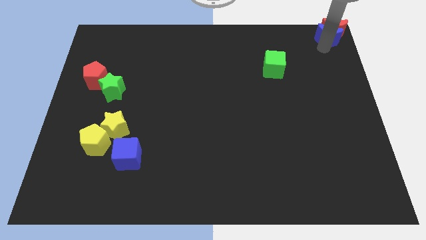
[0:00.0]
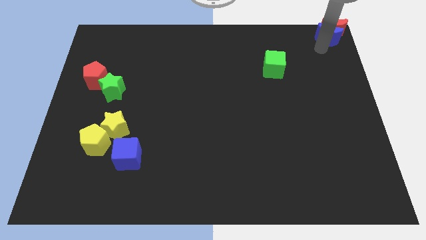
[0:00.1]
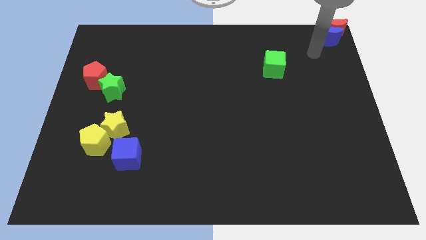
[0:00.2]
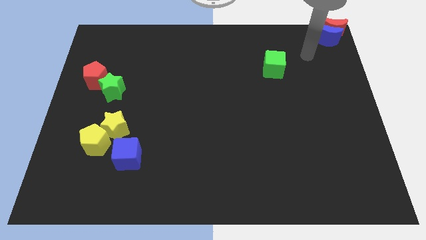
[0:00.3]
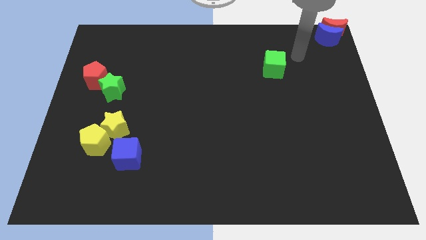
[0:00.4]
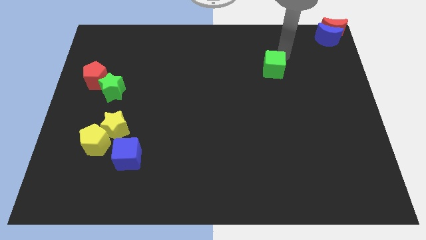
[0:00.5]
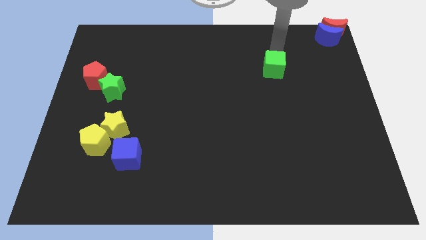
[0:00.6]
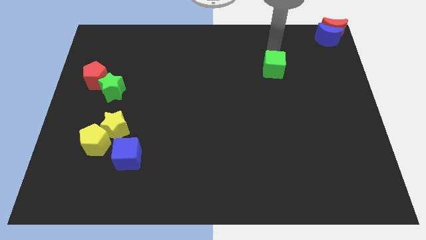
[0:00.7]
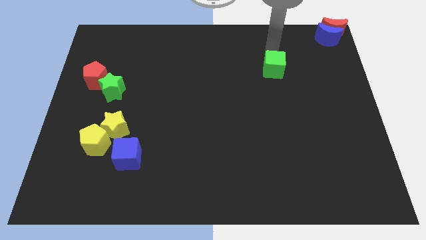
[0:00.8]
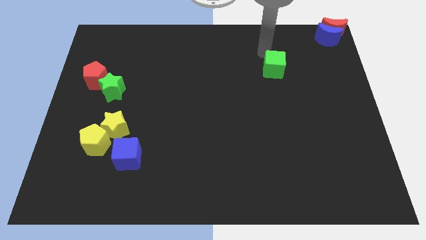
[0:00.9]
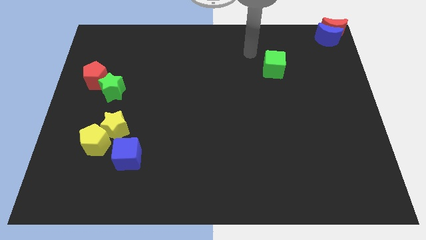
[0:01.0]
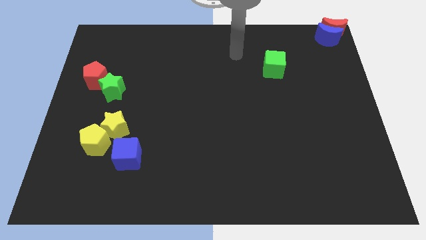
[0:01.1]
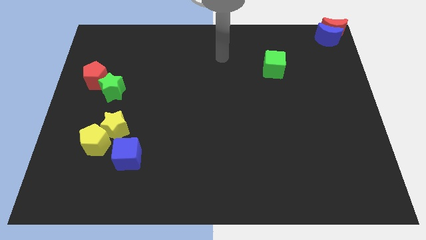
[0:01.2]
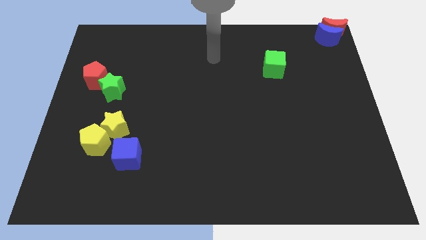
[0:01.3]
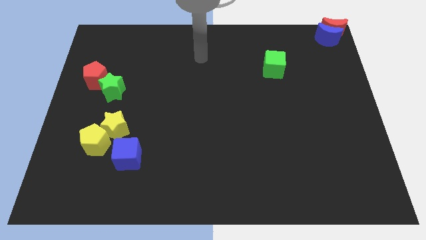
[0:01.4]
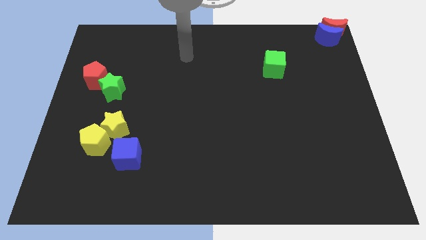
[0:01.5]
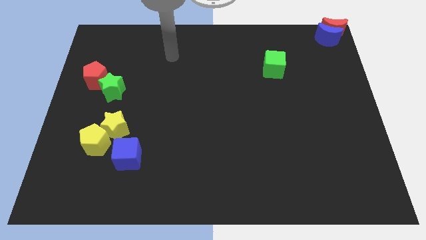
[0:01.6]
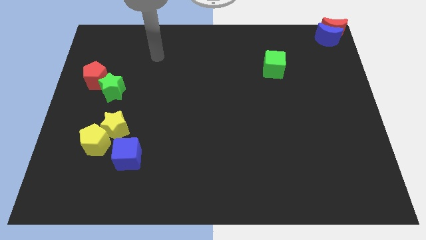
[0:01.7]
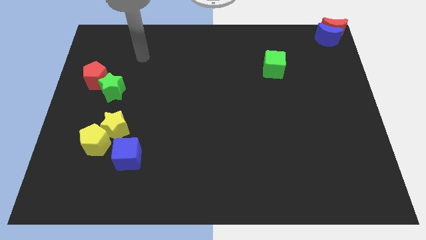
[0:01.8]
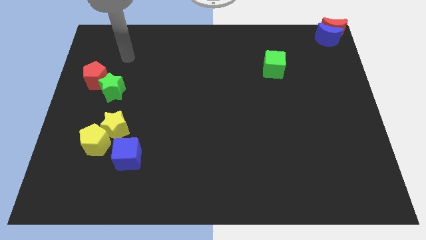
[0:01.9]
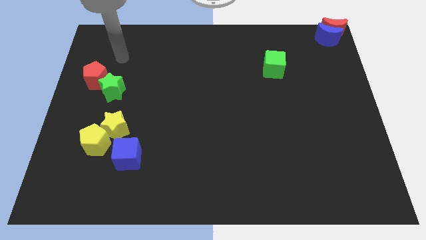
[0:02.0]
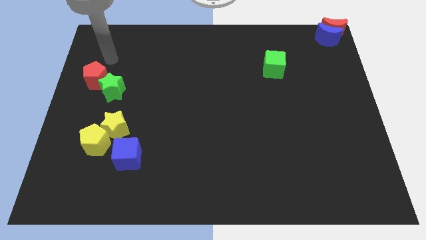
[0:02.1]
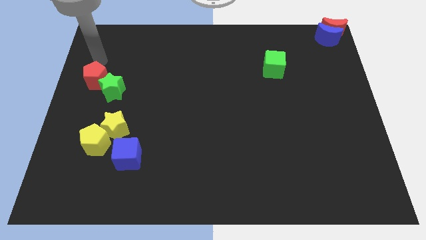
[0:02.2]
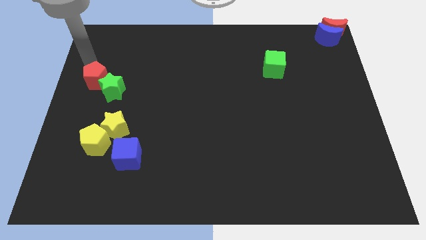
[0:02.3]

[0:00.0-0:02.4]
move your arm away from the blue crescent

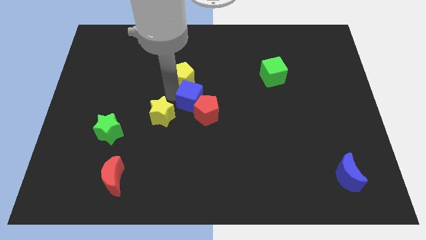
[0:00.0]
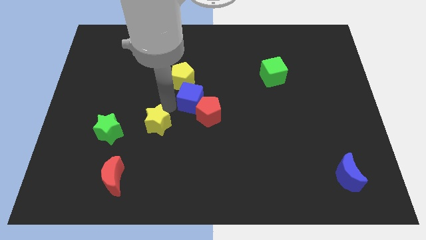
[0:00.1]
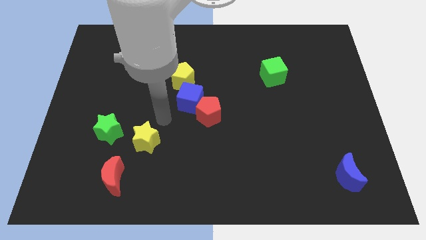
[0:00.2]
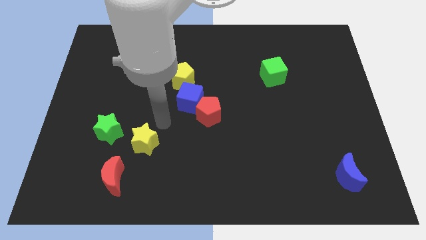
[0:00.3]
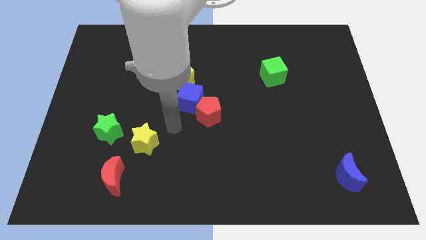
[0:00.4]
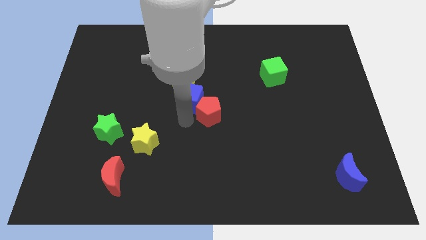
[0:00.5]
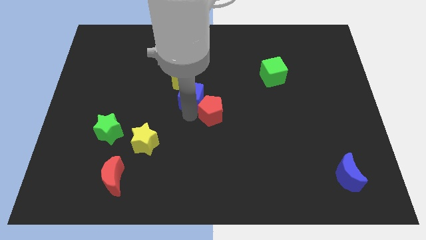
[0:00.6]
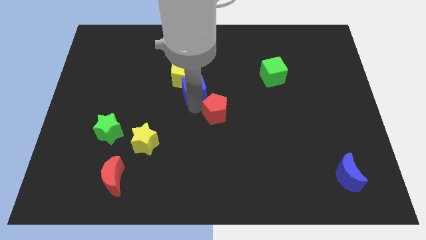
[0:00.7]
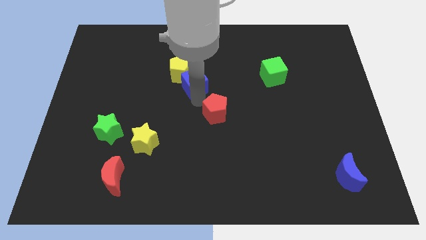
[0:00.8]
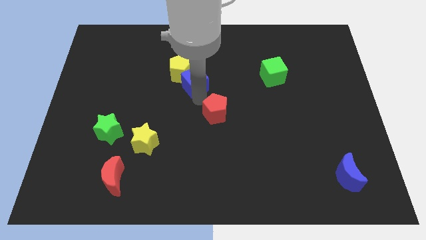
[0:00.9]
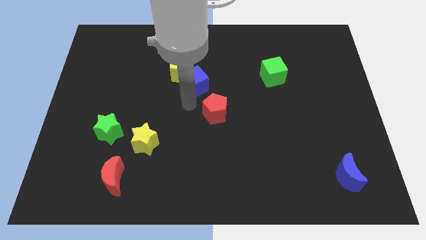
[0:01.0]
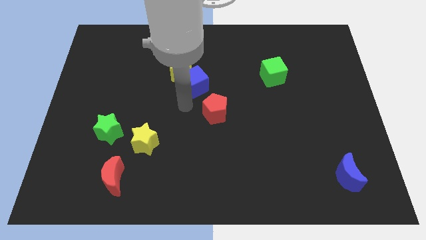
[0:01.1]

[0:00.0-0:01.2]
push the blue cube into the yellow pentagon

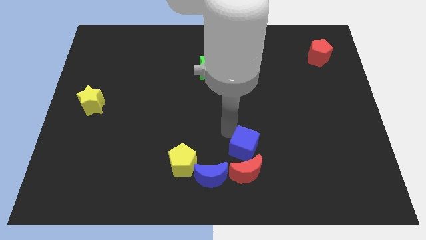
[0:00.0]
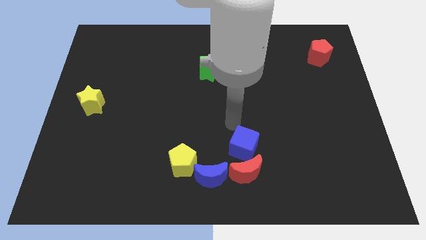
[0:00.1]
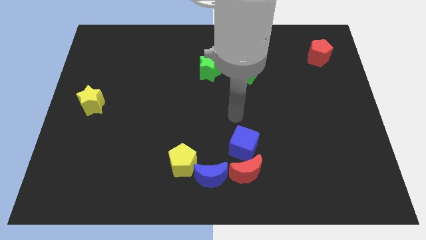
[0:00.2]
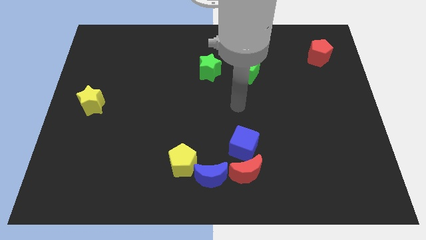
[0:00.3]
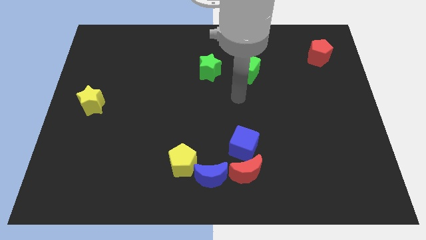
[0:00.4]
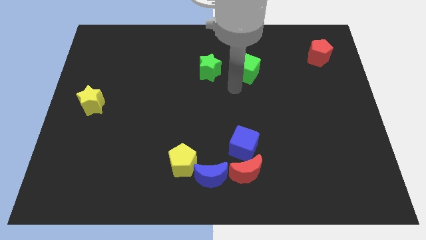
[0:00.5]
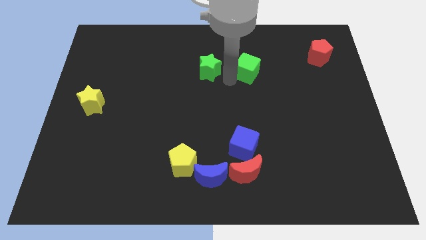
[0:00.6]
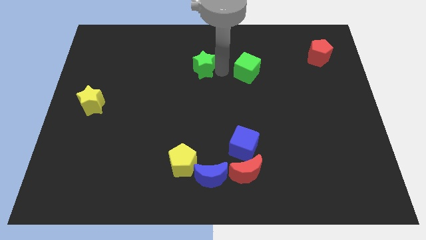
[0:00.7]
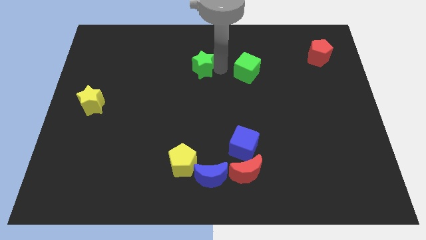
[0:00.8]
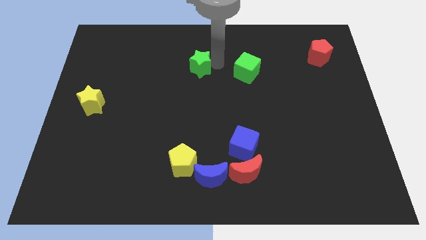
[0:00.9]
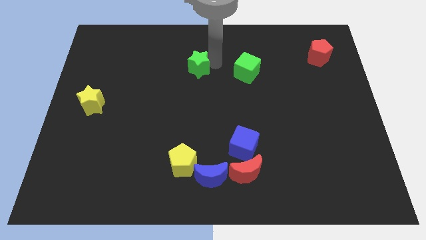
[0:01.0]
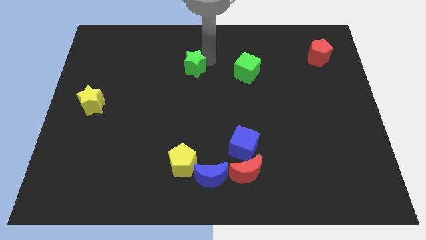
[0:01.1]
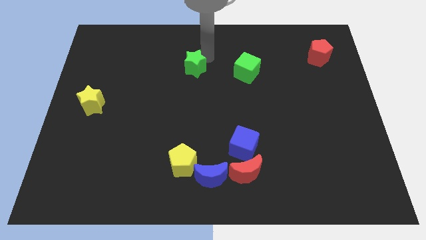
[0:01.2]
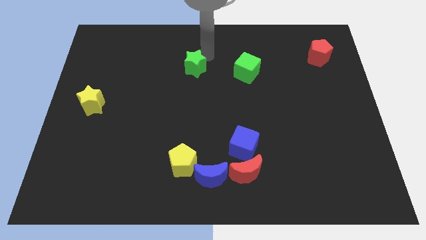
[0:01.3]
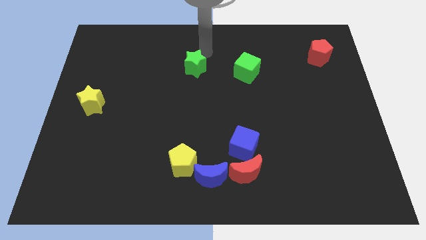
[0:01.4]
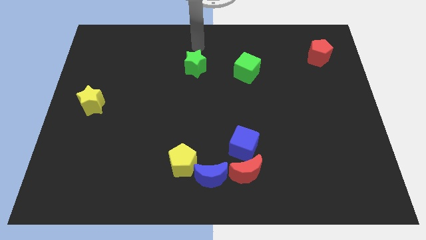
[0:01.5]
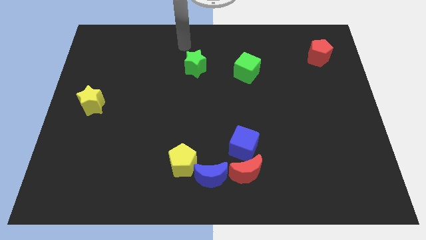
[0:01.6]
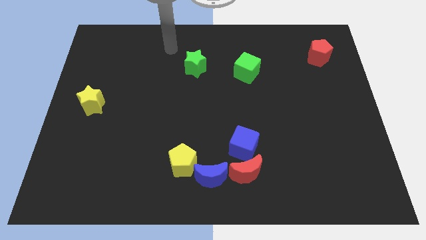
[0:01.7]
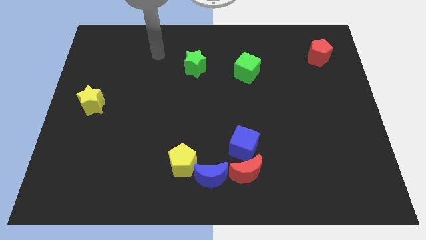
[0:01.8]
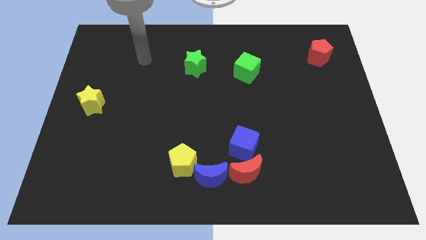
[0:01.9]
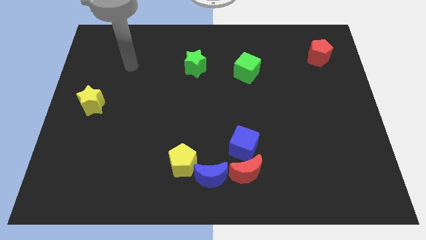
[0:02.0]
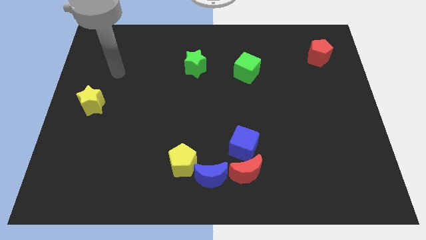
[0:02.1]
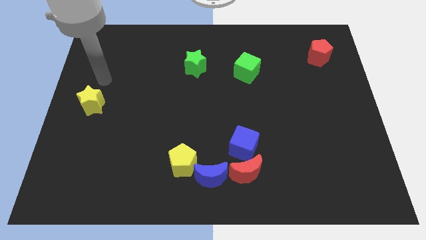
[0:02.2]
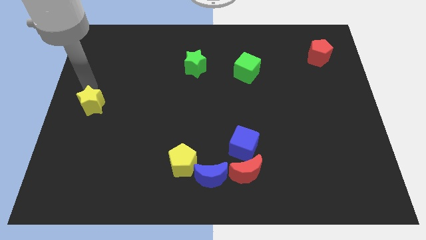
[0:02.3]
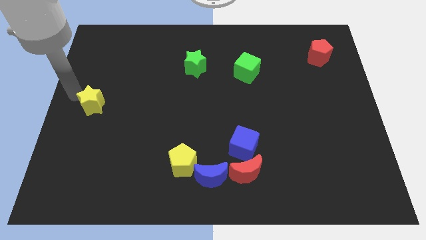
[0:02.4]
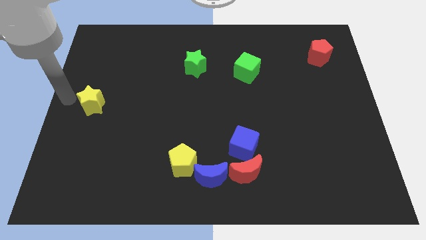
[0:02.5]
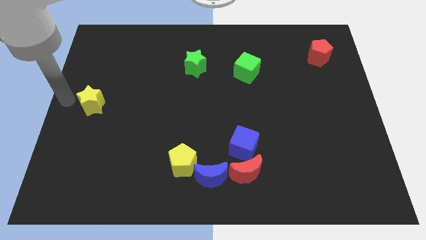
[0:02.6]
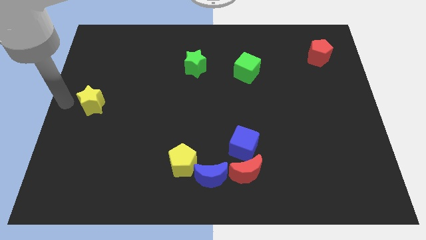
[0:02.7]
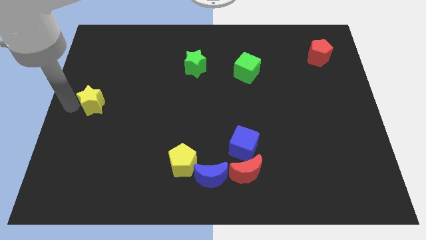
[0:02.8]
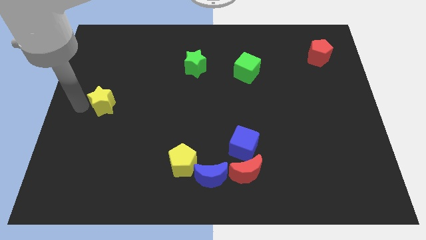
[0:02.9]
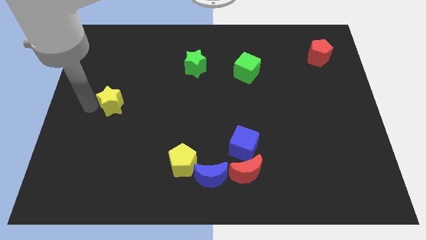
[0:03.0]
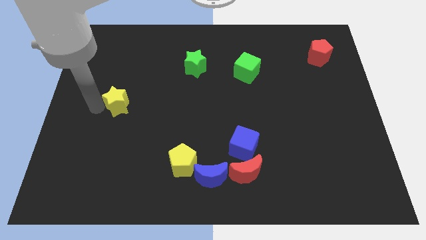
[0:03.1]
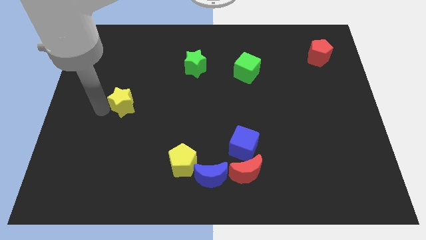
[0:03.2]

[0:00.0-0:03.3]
go near to the yellow star

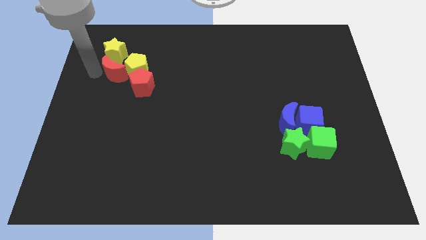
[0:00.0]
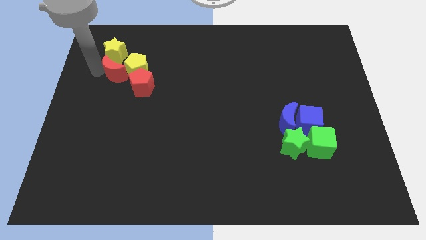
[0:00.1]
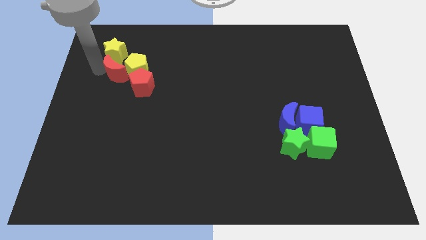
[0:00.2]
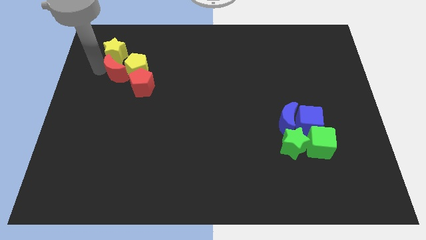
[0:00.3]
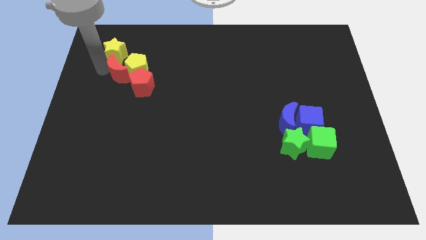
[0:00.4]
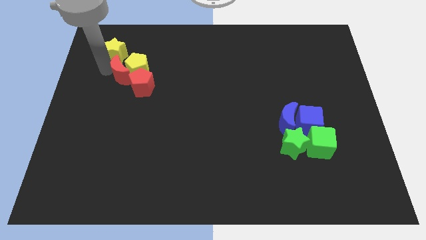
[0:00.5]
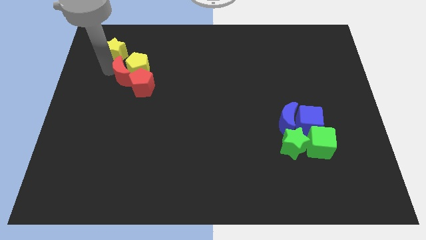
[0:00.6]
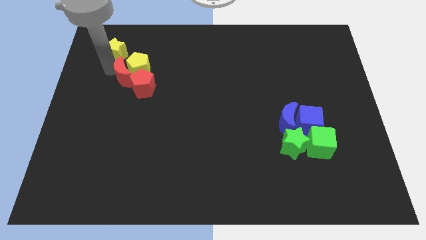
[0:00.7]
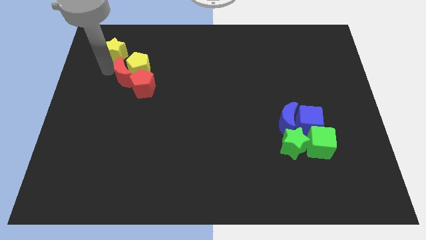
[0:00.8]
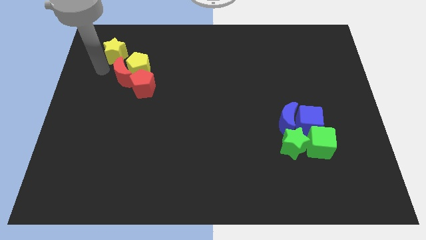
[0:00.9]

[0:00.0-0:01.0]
move the red crescent close to the yellow pentagon

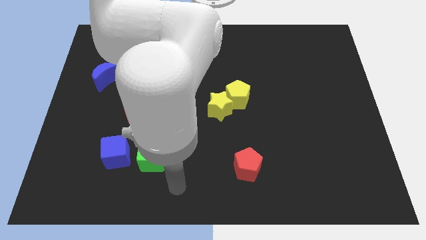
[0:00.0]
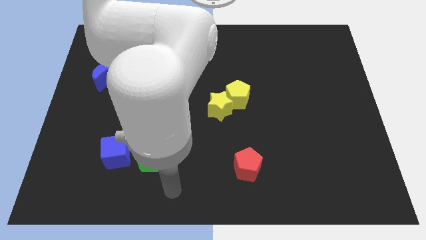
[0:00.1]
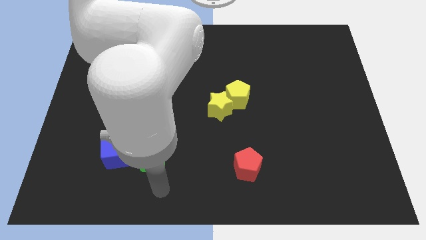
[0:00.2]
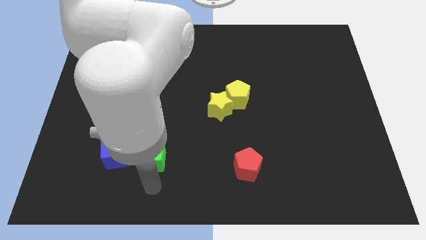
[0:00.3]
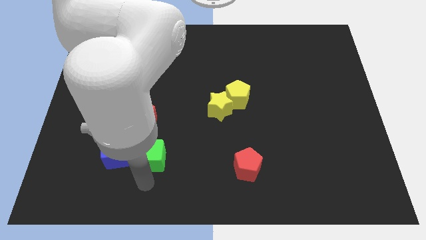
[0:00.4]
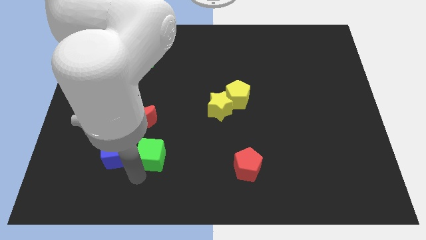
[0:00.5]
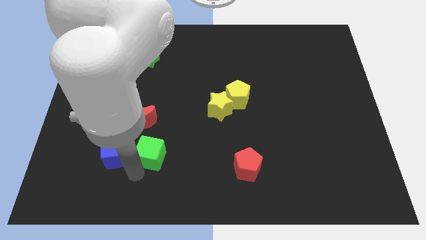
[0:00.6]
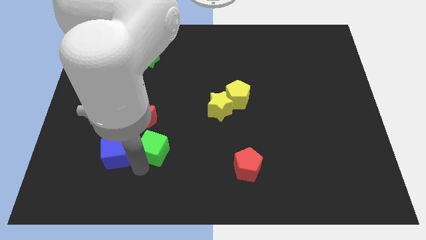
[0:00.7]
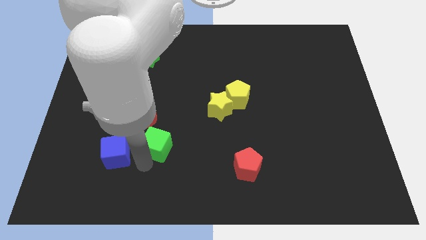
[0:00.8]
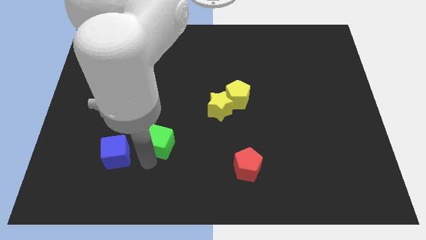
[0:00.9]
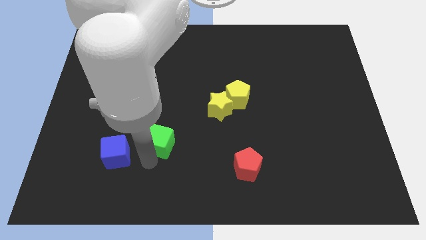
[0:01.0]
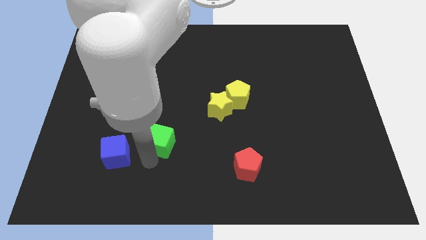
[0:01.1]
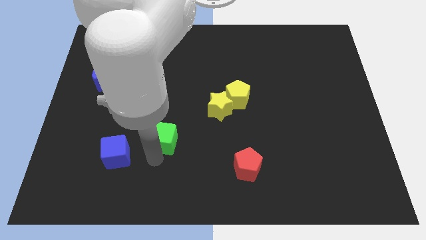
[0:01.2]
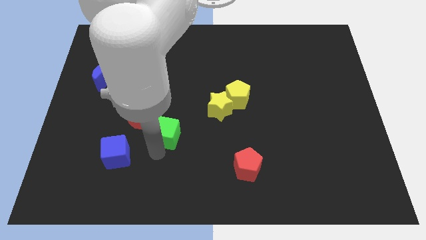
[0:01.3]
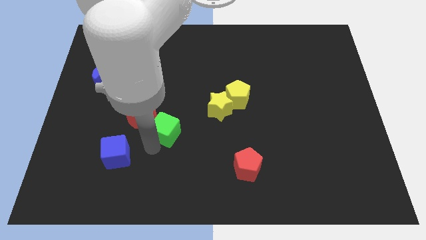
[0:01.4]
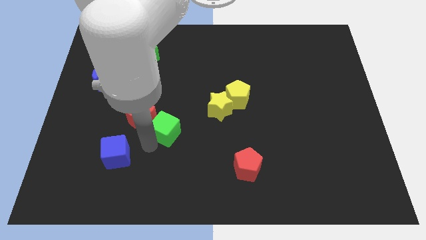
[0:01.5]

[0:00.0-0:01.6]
move the green cube slightly up
